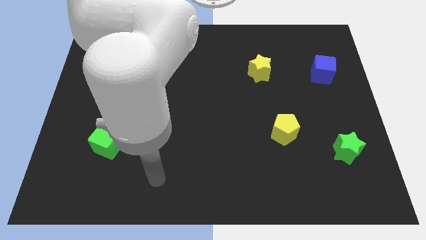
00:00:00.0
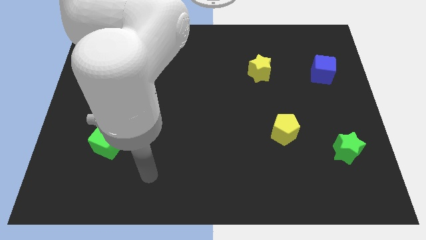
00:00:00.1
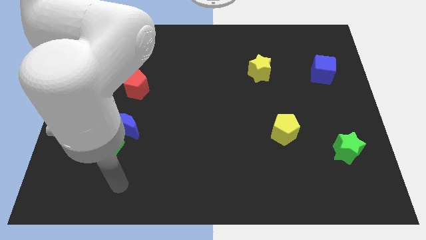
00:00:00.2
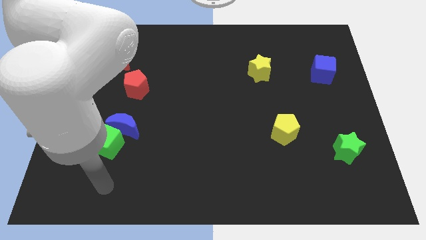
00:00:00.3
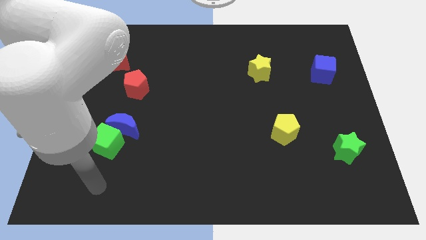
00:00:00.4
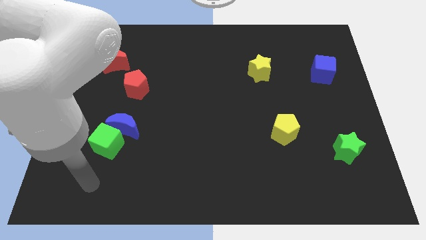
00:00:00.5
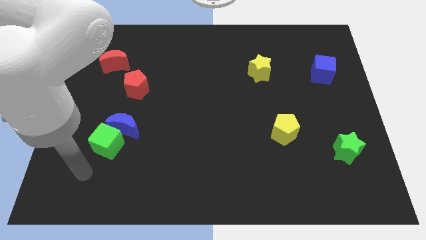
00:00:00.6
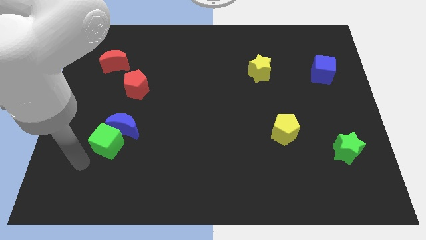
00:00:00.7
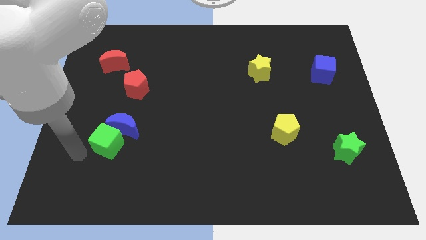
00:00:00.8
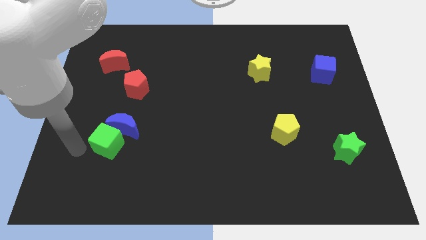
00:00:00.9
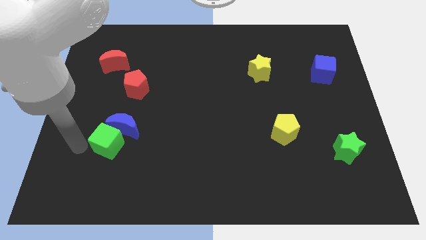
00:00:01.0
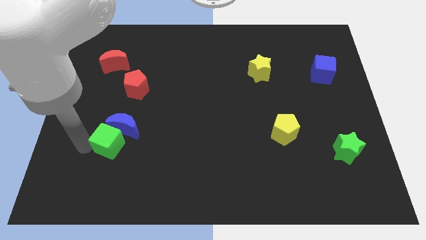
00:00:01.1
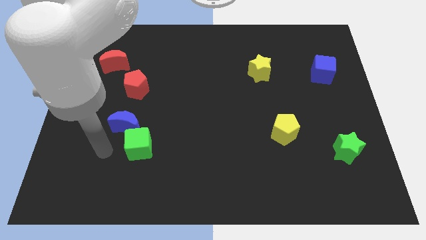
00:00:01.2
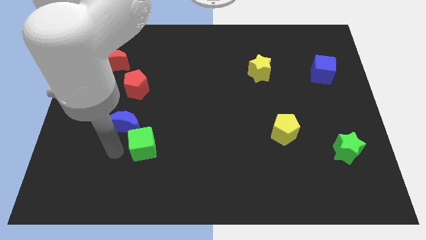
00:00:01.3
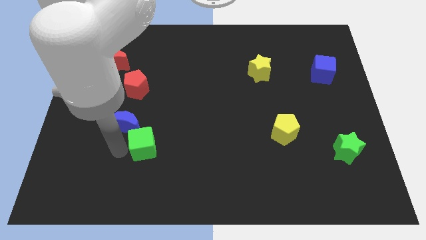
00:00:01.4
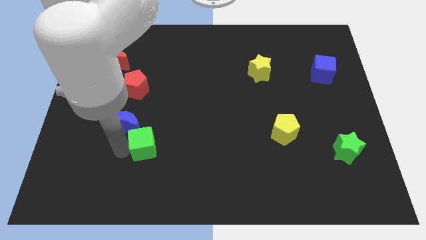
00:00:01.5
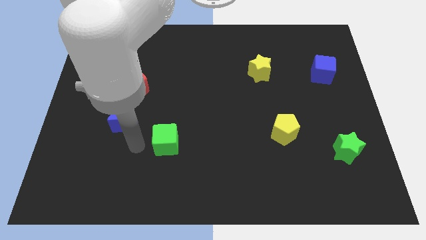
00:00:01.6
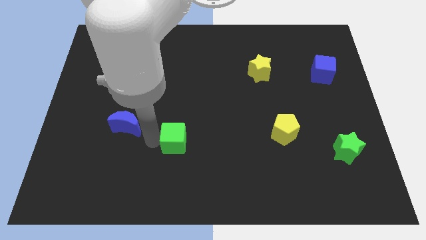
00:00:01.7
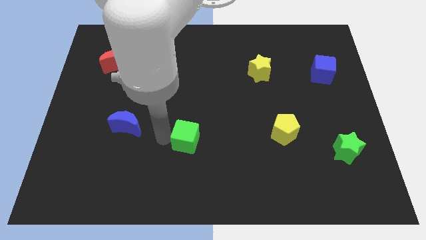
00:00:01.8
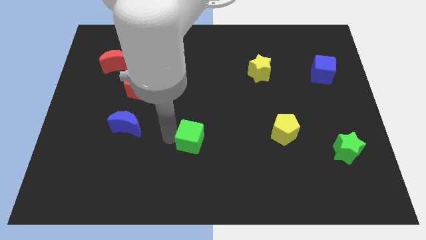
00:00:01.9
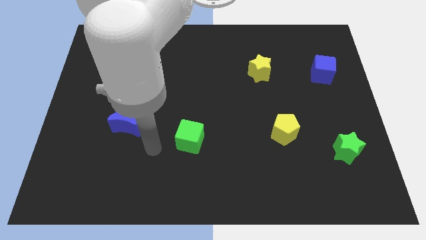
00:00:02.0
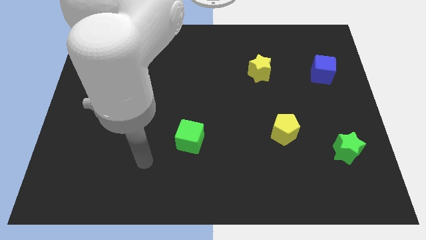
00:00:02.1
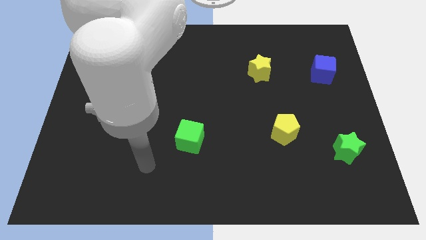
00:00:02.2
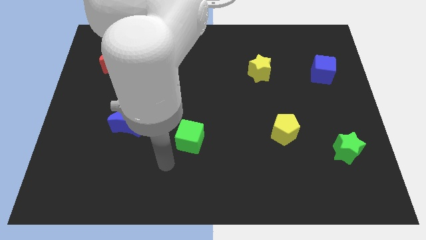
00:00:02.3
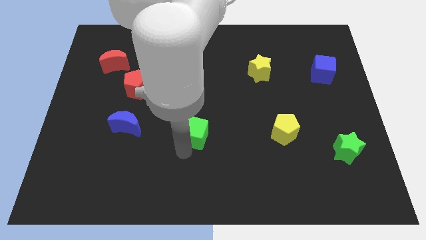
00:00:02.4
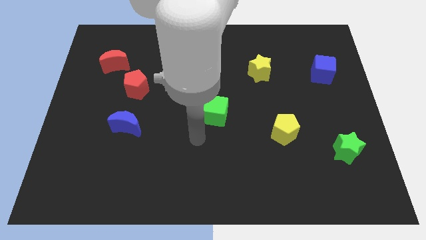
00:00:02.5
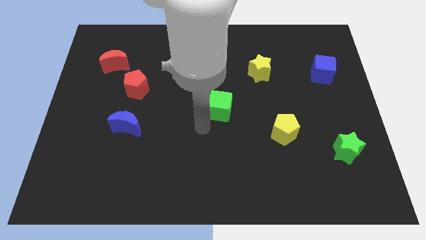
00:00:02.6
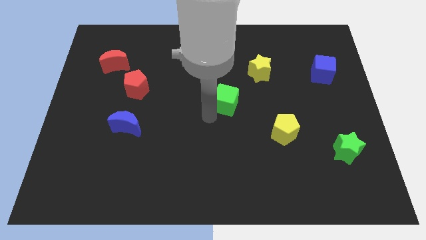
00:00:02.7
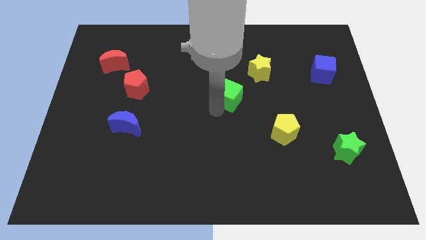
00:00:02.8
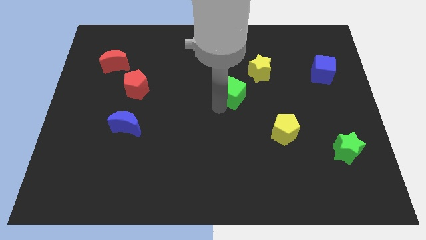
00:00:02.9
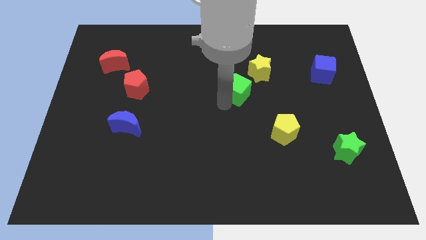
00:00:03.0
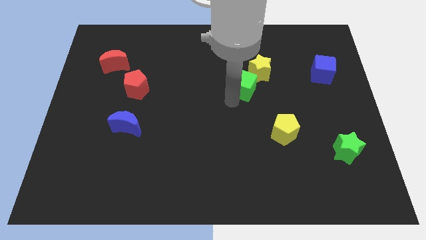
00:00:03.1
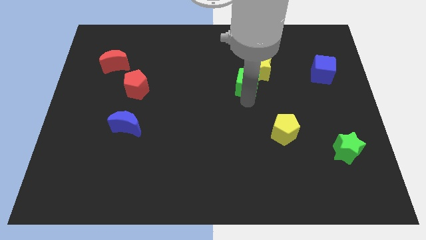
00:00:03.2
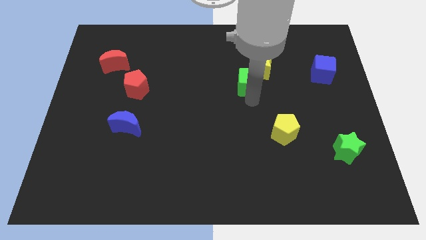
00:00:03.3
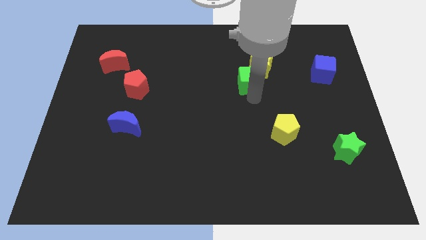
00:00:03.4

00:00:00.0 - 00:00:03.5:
put the green cube close to the yellow star

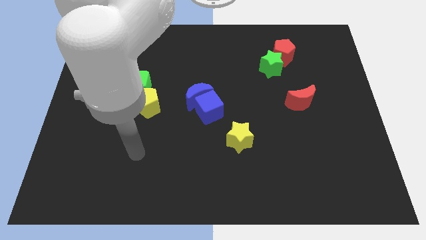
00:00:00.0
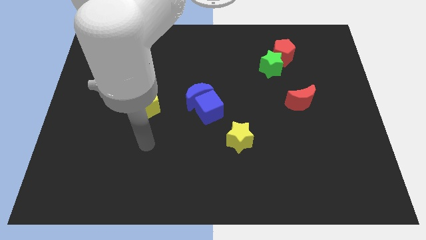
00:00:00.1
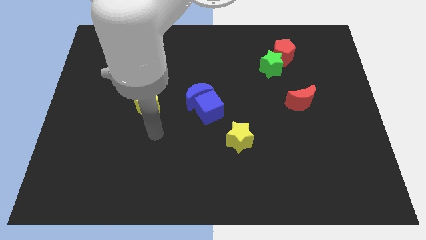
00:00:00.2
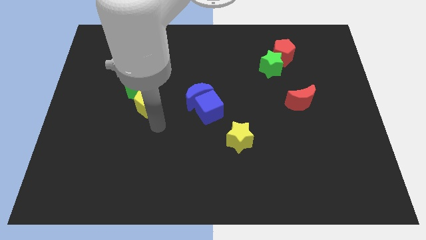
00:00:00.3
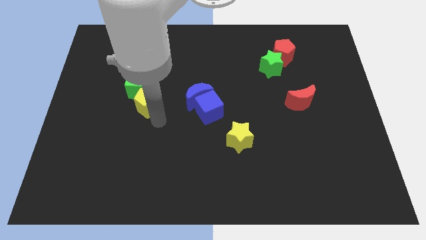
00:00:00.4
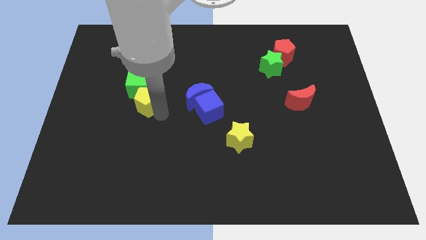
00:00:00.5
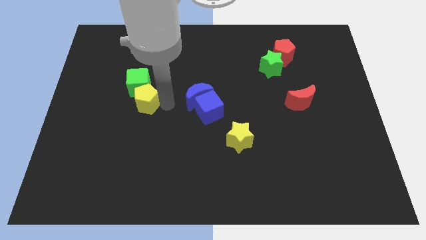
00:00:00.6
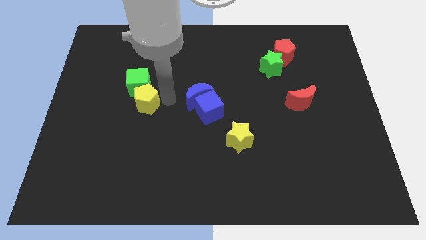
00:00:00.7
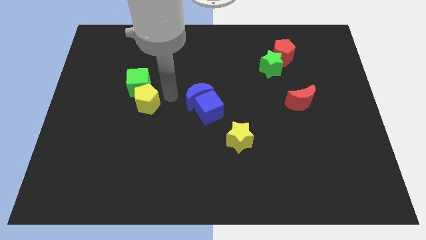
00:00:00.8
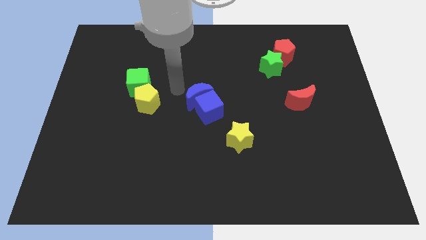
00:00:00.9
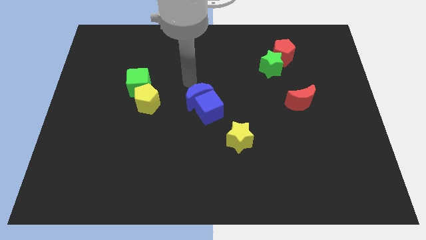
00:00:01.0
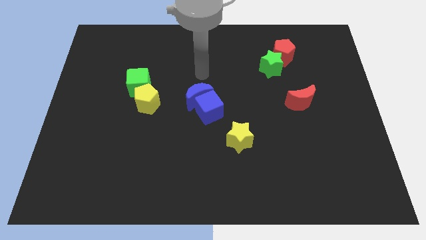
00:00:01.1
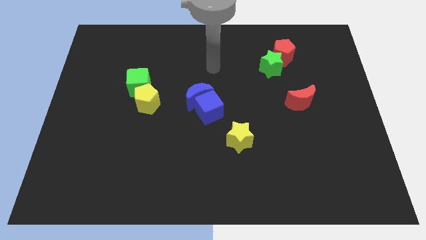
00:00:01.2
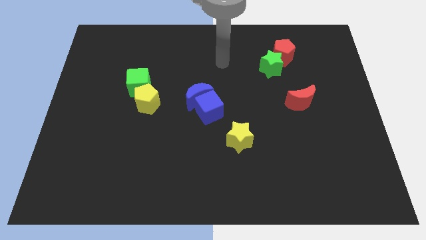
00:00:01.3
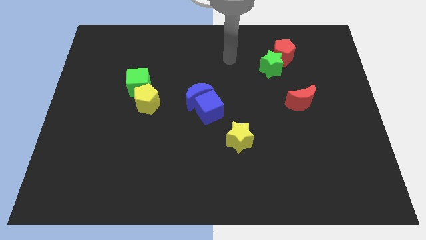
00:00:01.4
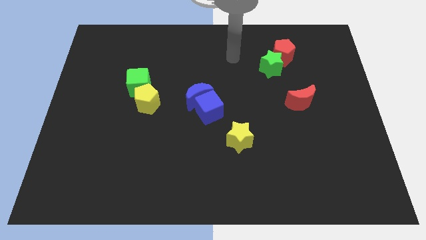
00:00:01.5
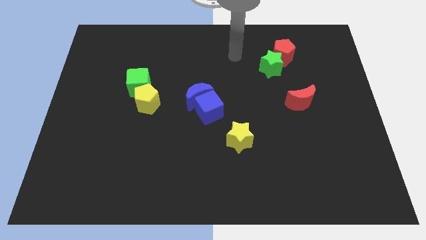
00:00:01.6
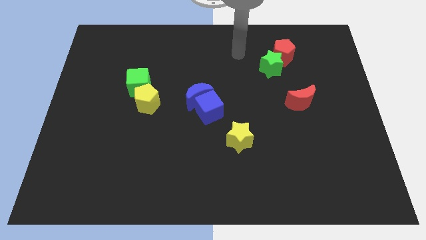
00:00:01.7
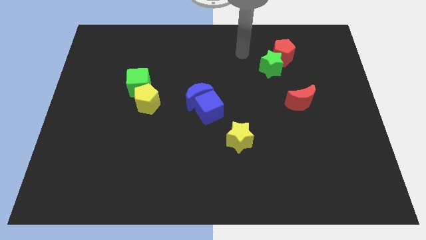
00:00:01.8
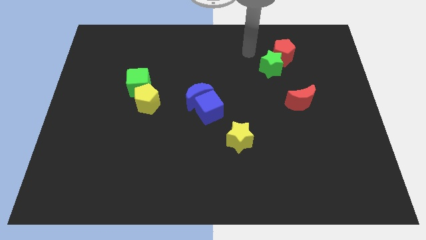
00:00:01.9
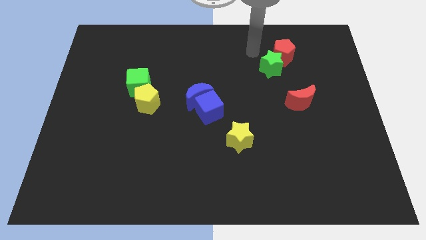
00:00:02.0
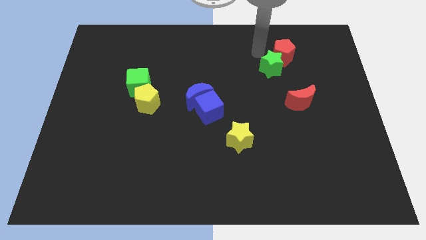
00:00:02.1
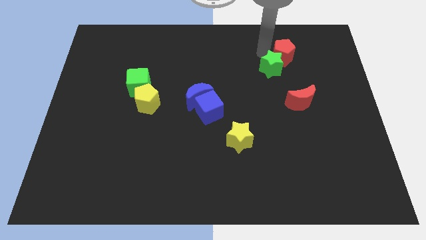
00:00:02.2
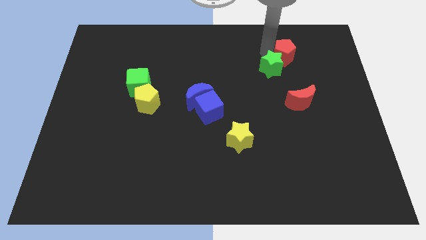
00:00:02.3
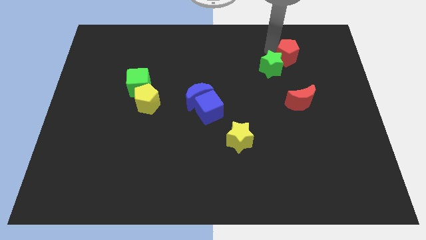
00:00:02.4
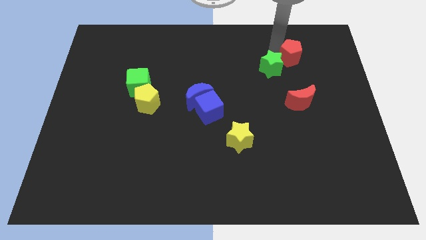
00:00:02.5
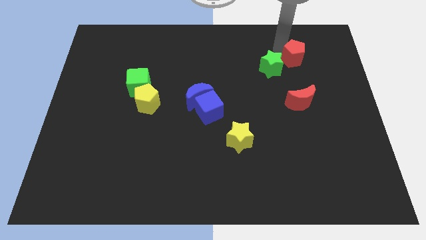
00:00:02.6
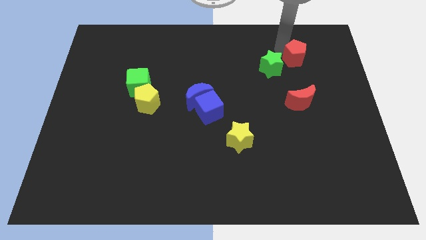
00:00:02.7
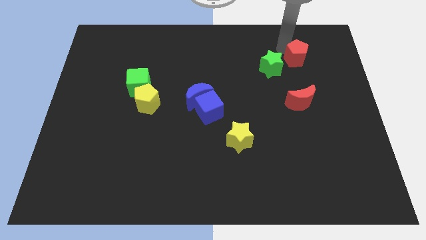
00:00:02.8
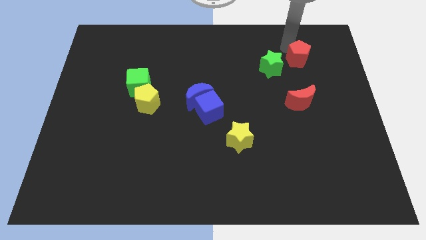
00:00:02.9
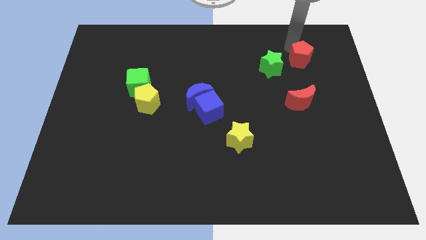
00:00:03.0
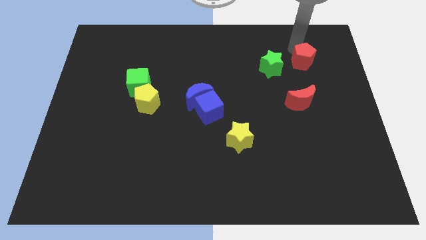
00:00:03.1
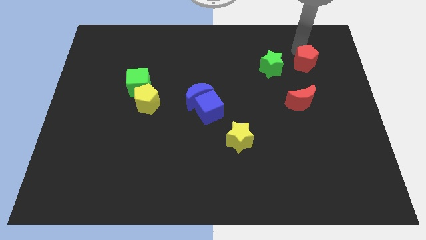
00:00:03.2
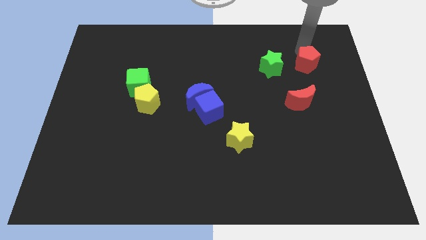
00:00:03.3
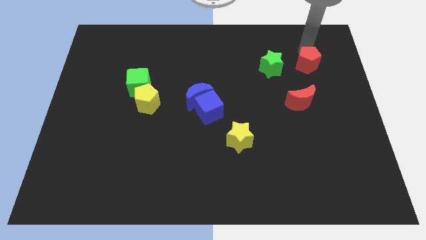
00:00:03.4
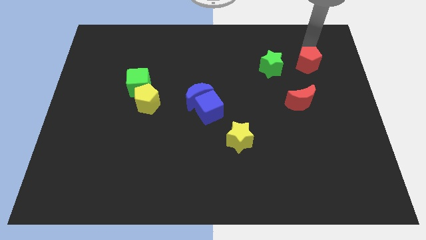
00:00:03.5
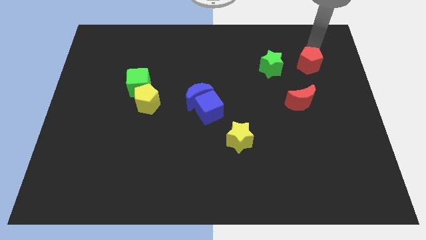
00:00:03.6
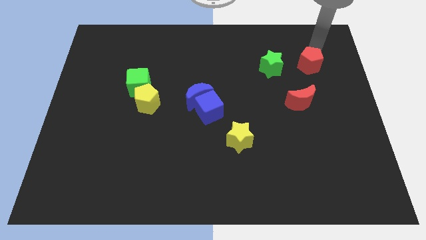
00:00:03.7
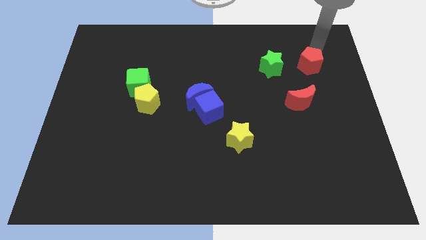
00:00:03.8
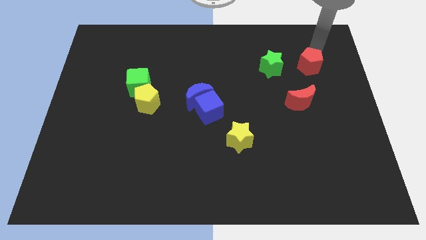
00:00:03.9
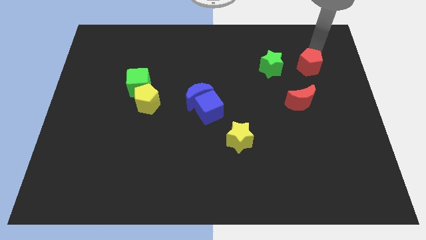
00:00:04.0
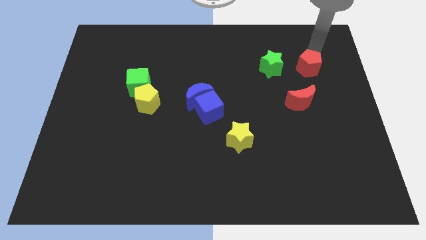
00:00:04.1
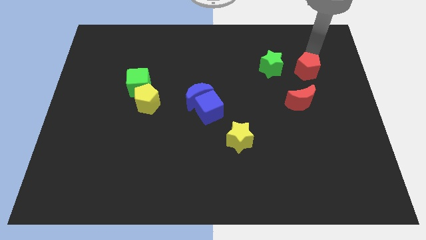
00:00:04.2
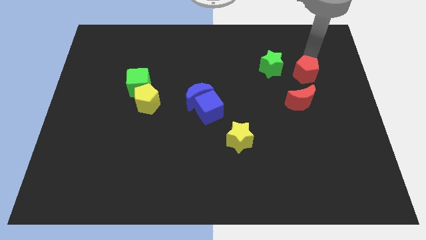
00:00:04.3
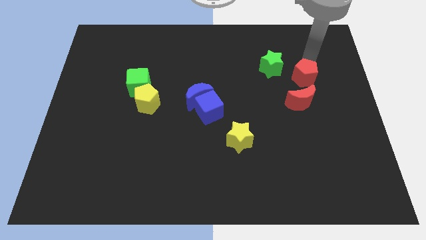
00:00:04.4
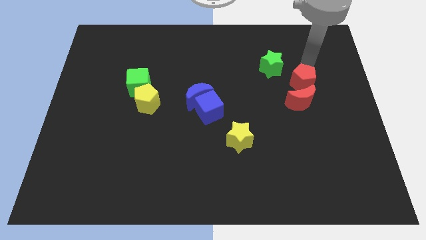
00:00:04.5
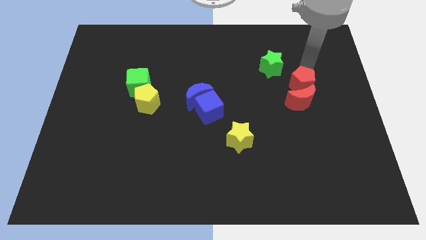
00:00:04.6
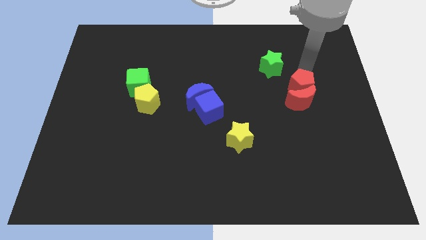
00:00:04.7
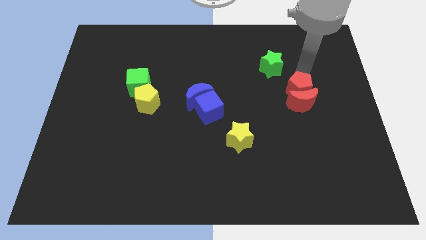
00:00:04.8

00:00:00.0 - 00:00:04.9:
move the red pentagon towards the red moon
